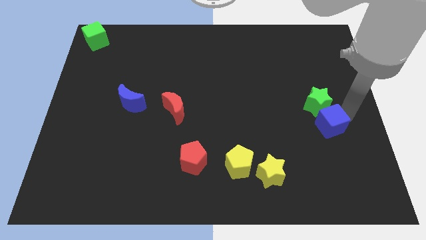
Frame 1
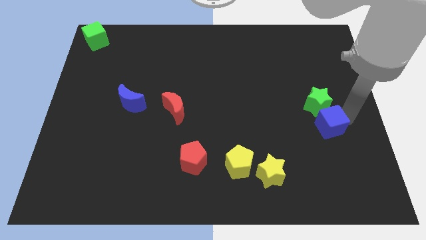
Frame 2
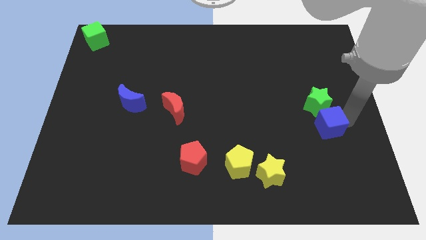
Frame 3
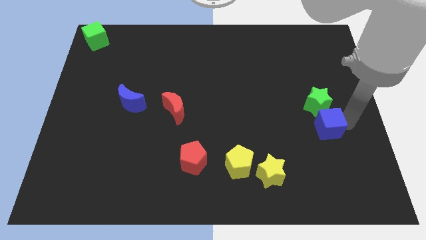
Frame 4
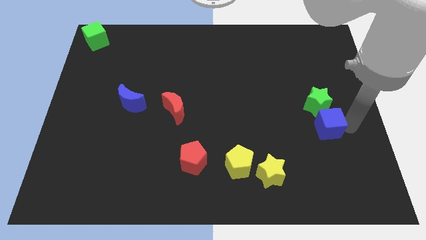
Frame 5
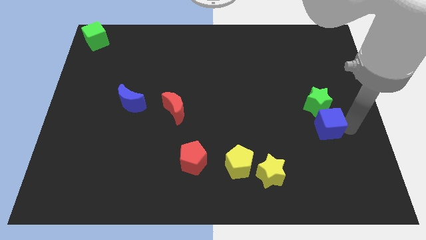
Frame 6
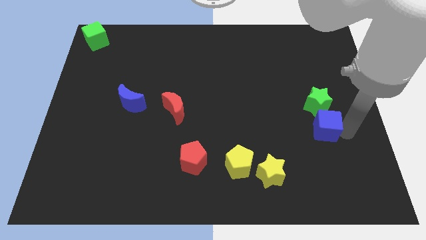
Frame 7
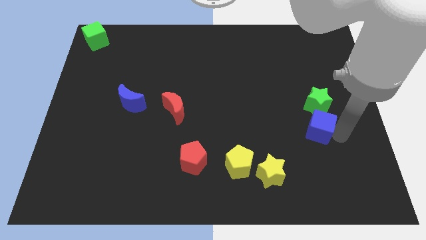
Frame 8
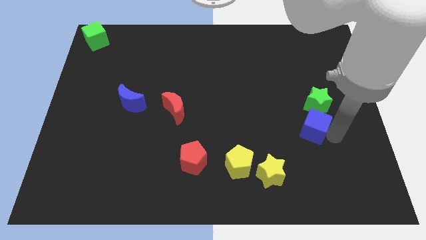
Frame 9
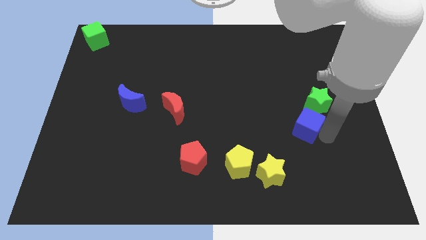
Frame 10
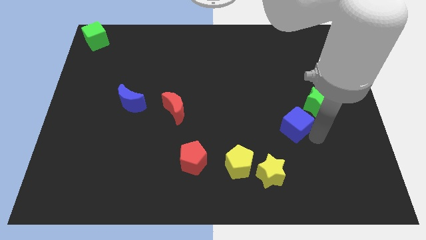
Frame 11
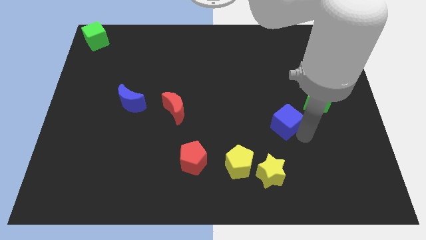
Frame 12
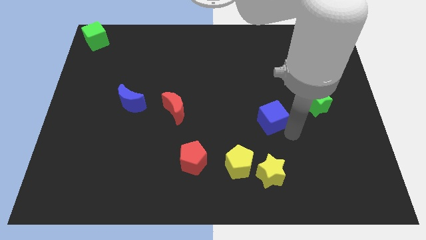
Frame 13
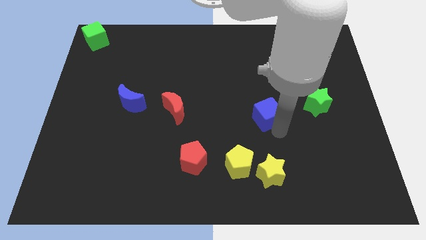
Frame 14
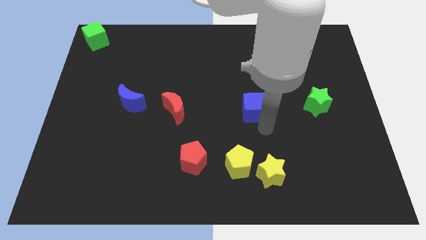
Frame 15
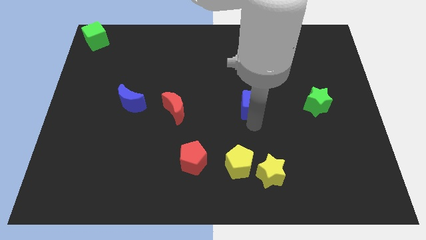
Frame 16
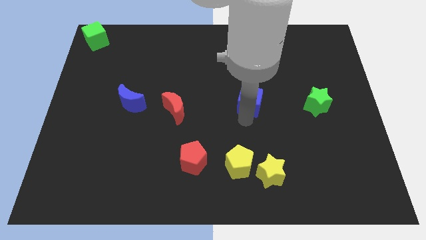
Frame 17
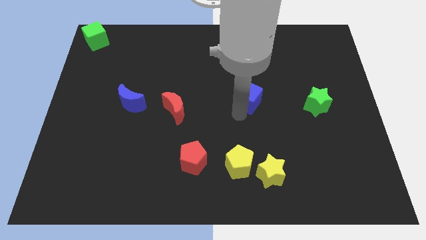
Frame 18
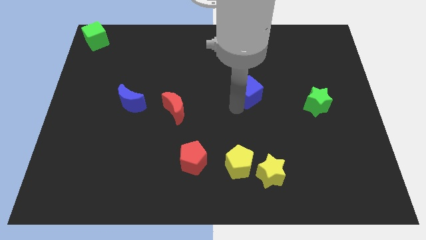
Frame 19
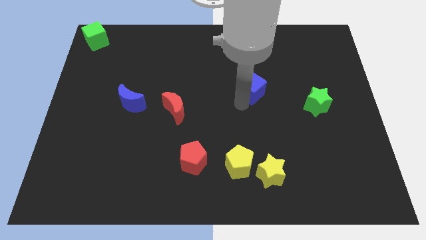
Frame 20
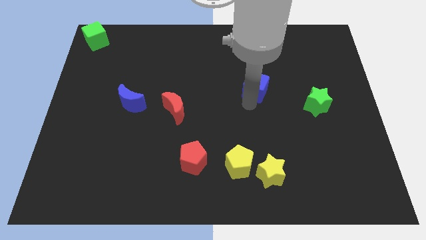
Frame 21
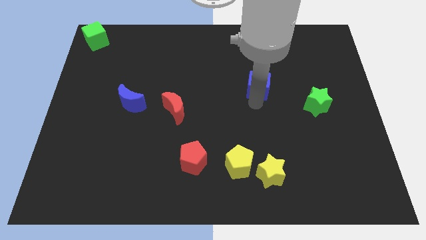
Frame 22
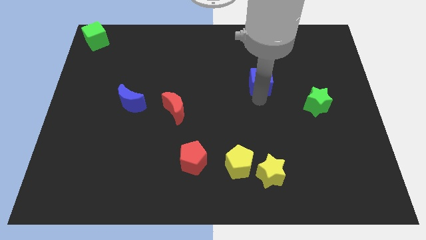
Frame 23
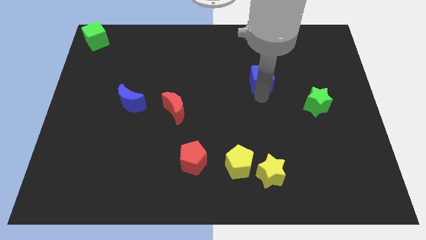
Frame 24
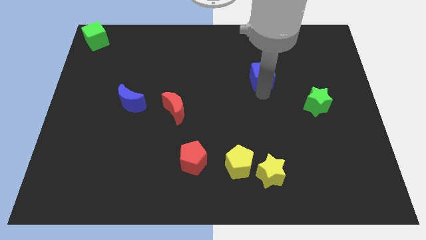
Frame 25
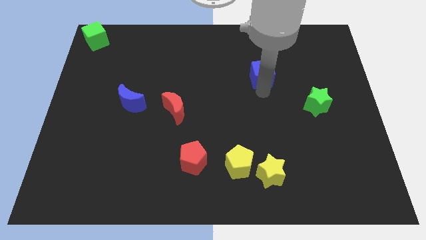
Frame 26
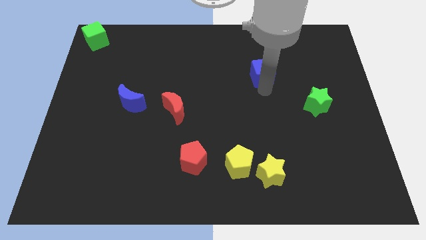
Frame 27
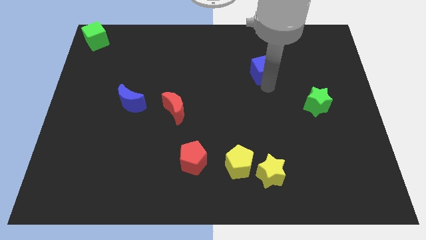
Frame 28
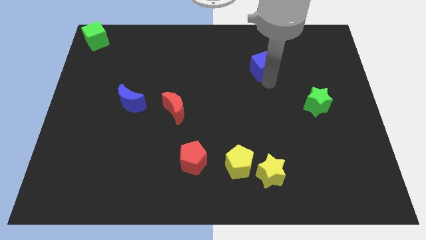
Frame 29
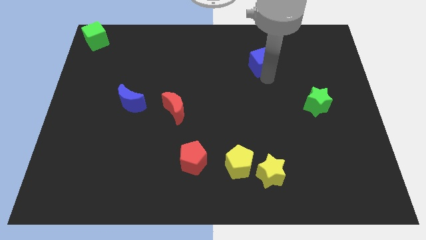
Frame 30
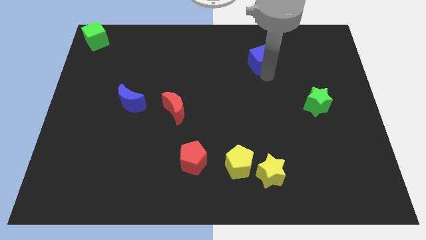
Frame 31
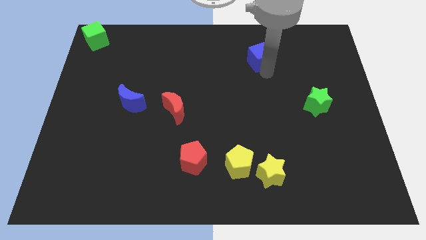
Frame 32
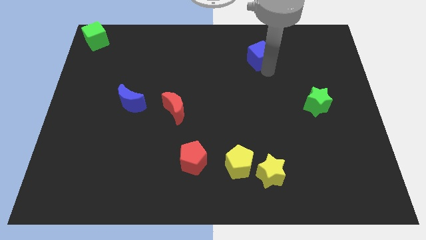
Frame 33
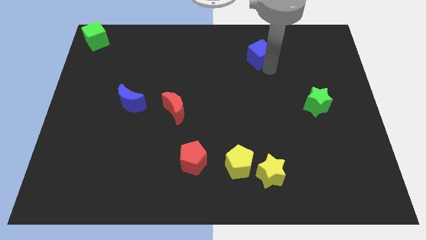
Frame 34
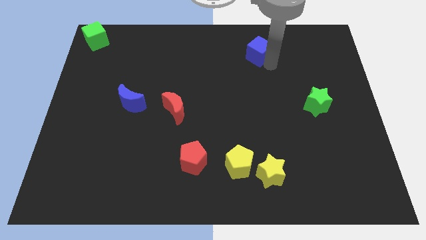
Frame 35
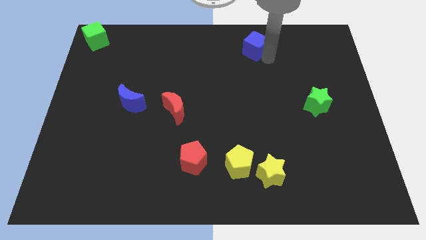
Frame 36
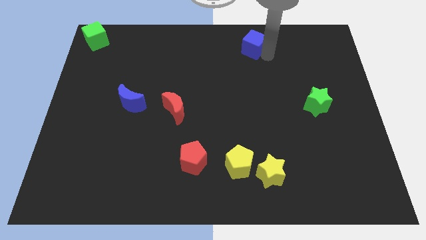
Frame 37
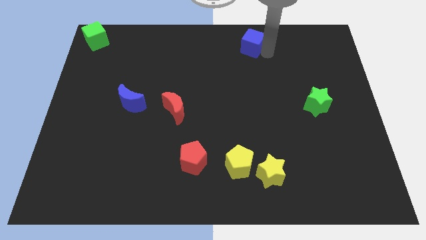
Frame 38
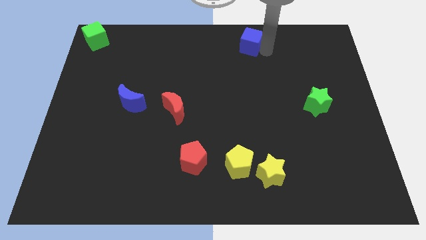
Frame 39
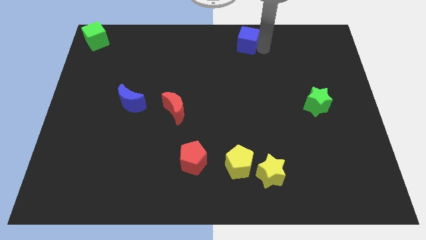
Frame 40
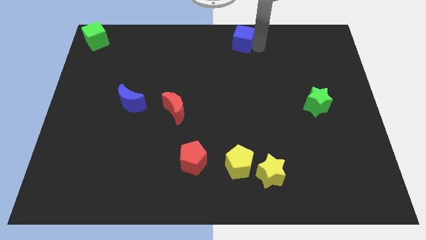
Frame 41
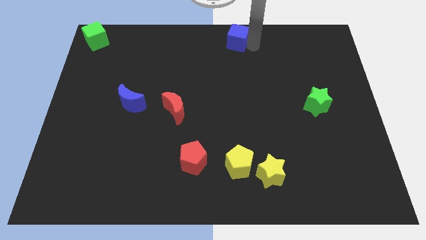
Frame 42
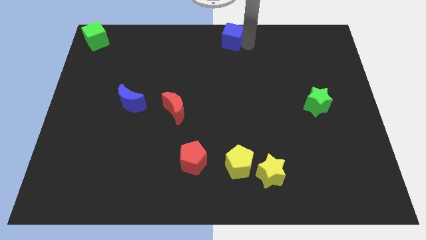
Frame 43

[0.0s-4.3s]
separate blue cube from the green star

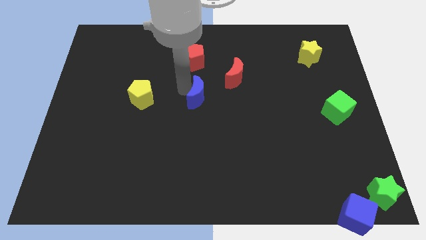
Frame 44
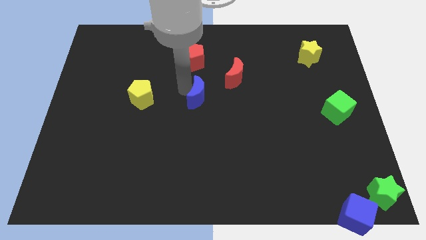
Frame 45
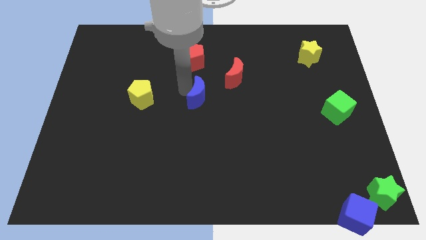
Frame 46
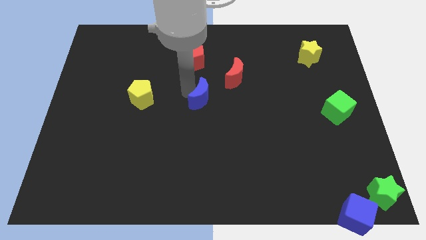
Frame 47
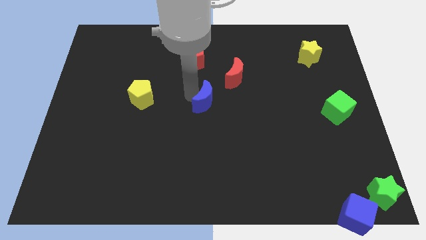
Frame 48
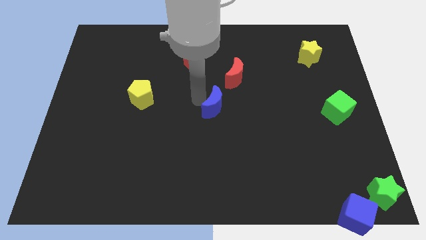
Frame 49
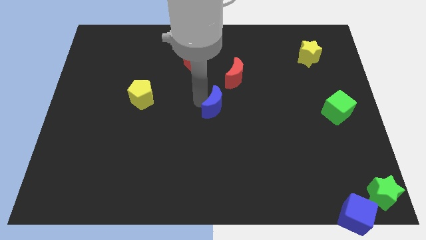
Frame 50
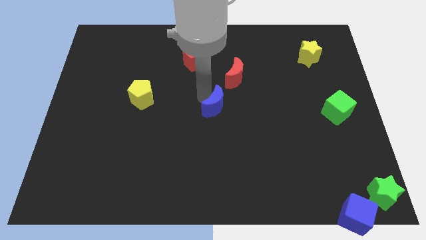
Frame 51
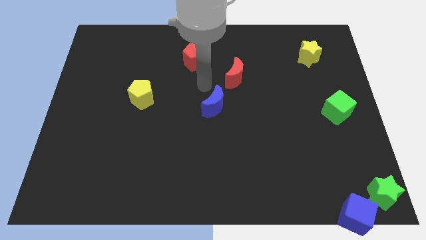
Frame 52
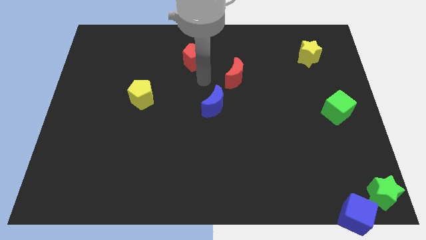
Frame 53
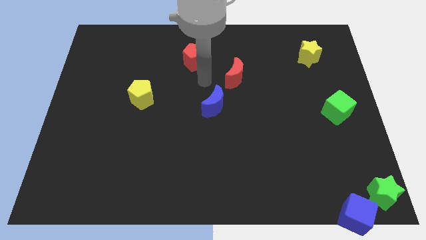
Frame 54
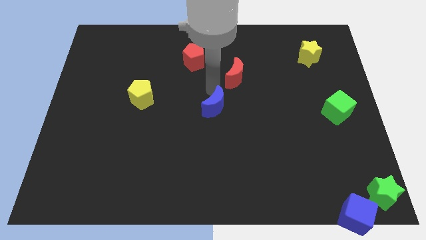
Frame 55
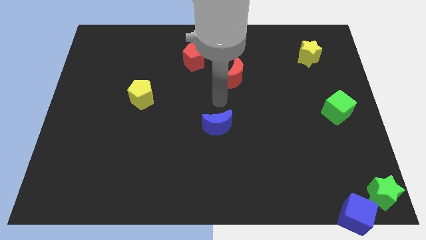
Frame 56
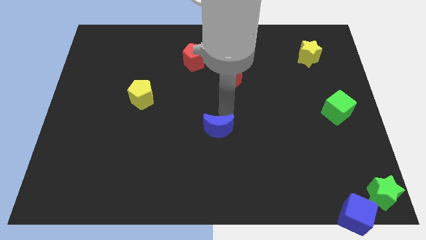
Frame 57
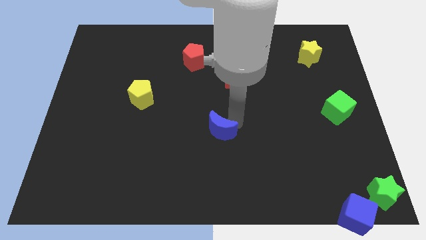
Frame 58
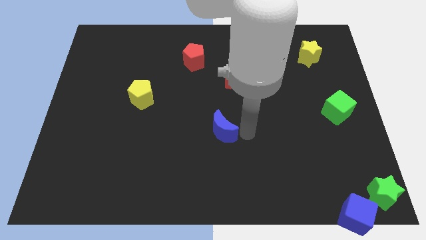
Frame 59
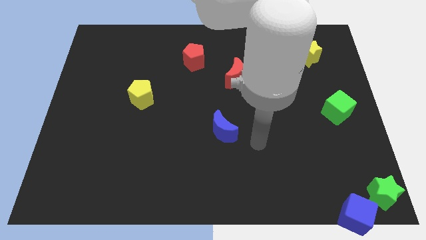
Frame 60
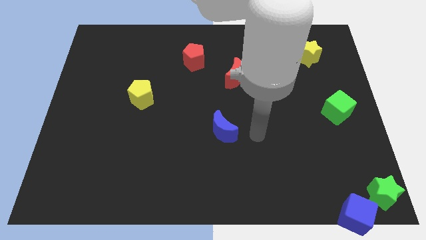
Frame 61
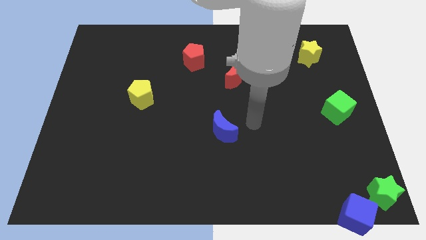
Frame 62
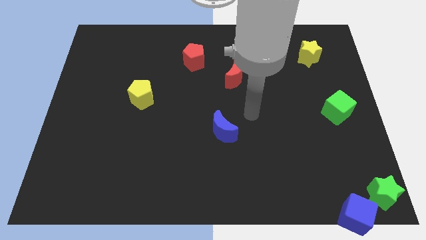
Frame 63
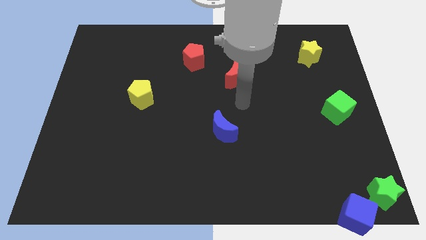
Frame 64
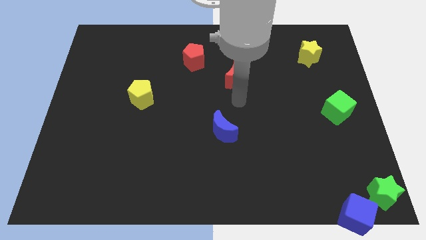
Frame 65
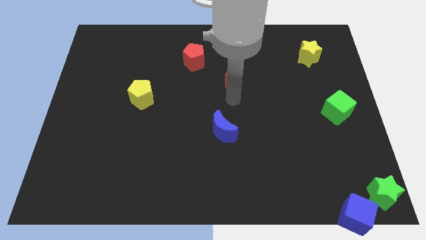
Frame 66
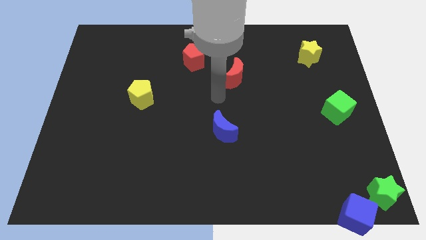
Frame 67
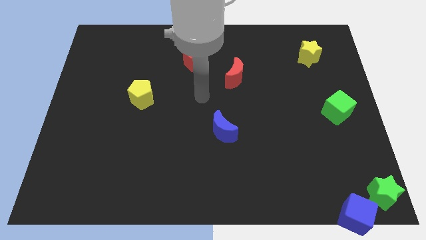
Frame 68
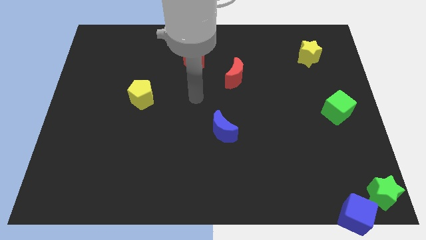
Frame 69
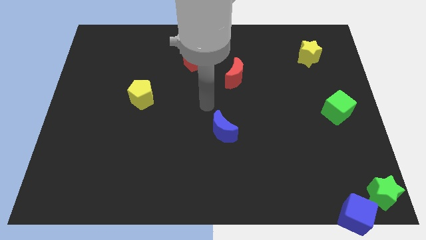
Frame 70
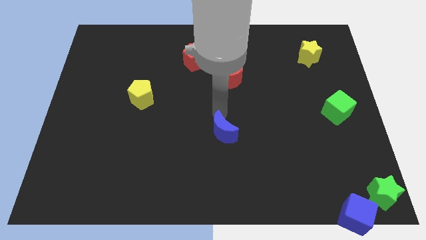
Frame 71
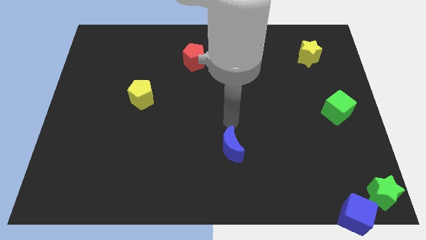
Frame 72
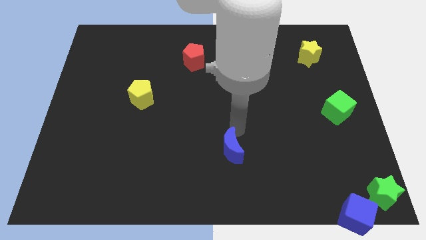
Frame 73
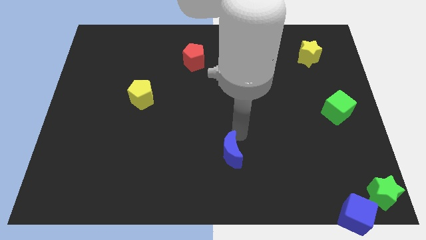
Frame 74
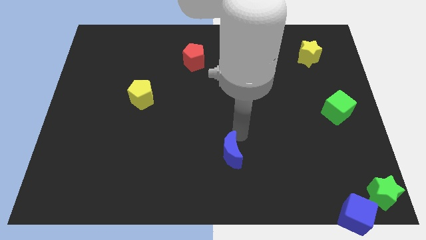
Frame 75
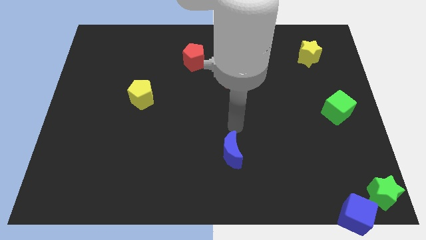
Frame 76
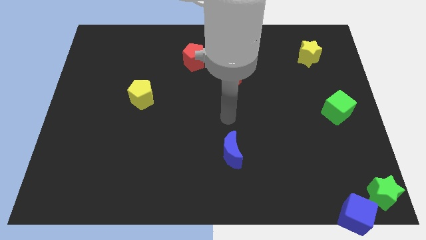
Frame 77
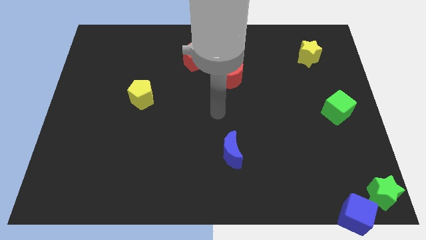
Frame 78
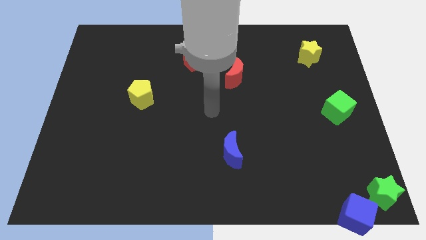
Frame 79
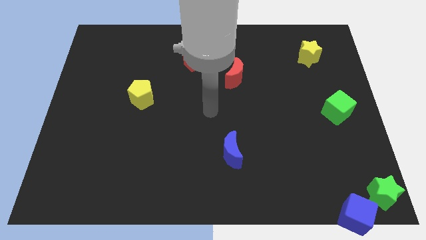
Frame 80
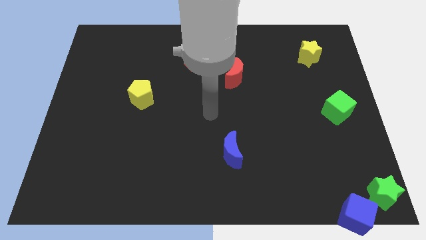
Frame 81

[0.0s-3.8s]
slide the blue crescent vertically below the red moon

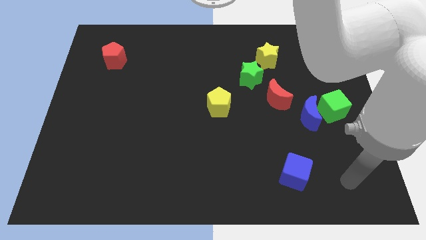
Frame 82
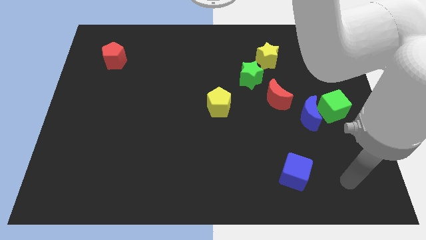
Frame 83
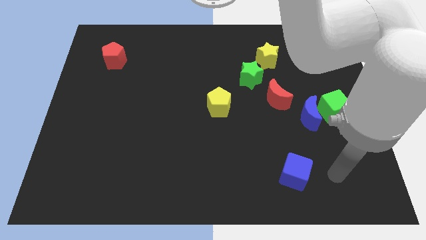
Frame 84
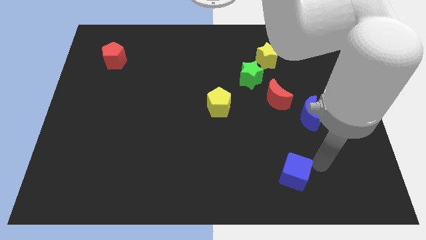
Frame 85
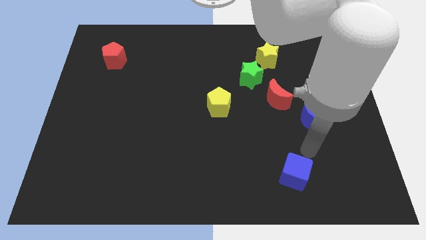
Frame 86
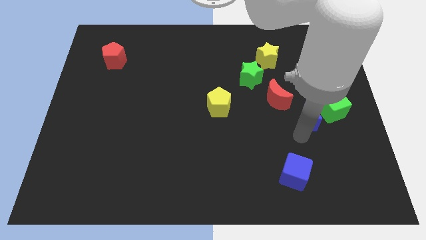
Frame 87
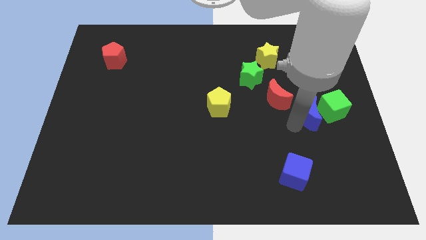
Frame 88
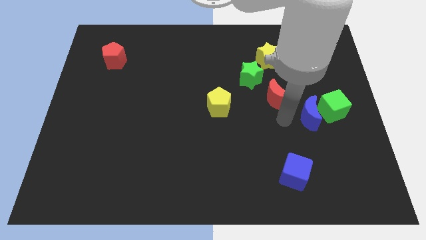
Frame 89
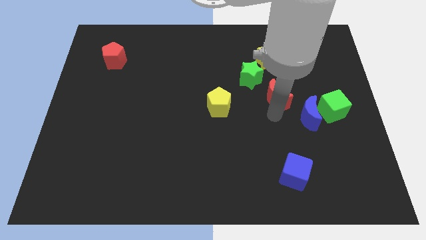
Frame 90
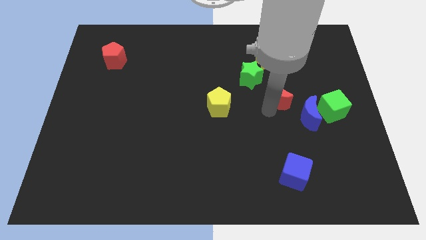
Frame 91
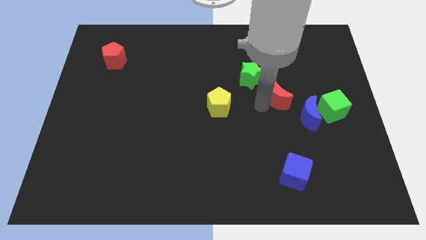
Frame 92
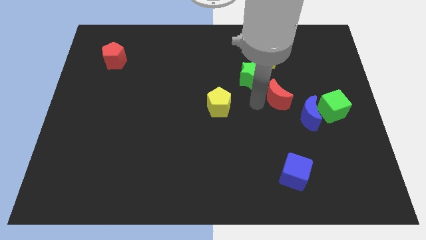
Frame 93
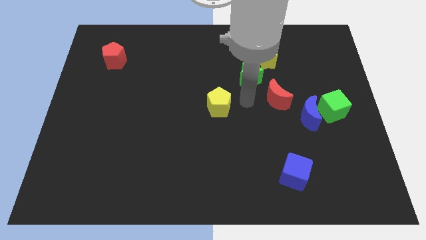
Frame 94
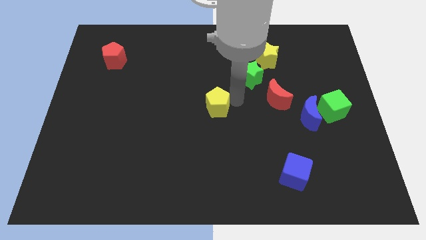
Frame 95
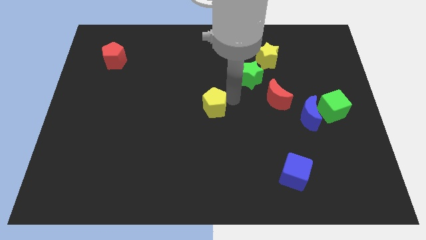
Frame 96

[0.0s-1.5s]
place the arm right to the yellow pentagon
